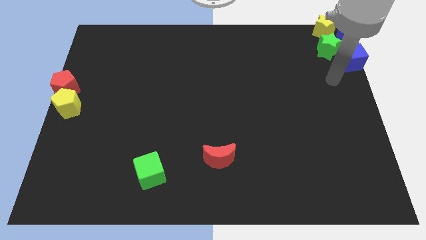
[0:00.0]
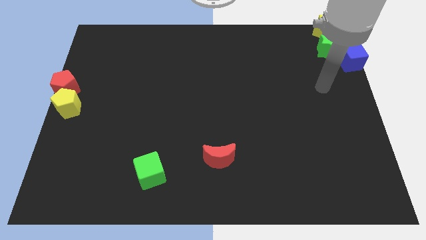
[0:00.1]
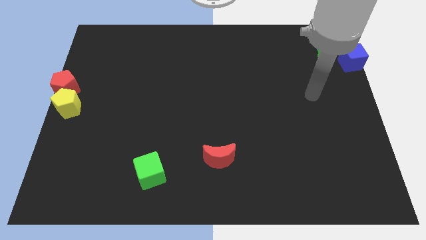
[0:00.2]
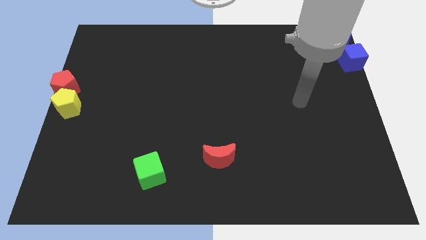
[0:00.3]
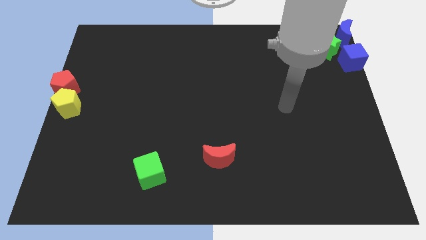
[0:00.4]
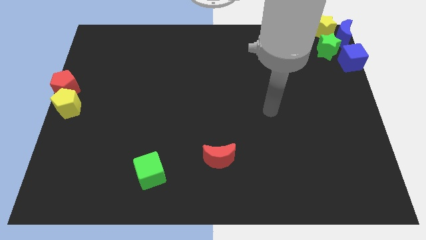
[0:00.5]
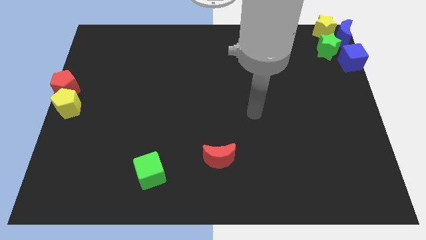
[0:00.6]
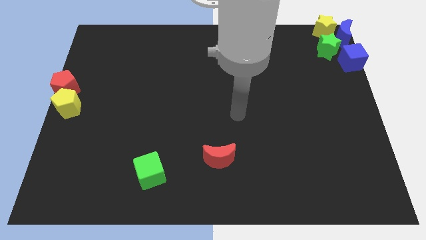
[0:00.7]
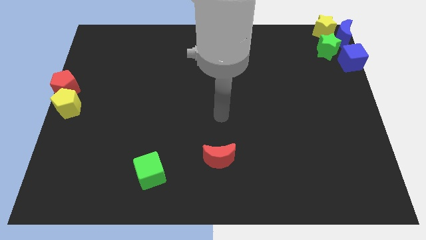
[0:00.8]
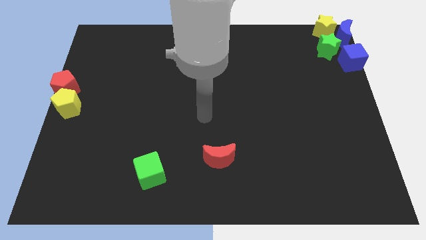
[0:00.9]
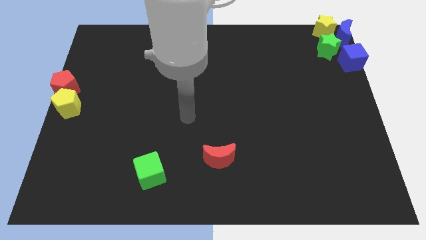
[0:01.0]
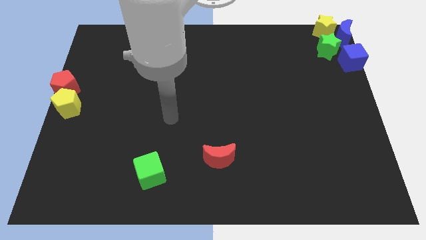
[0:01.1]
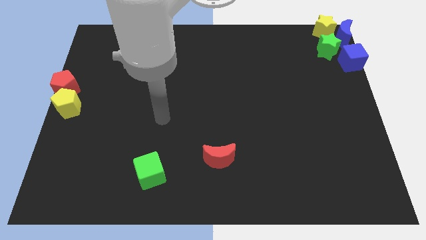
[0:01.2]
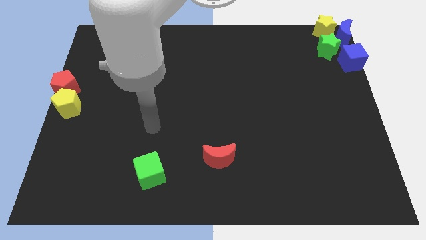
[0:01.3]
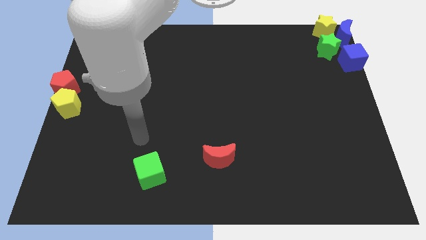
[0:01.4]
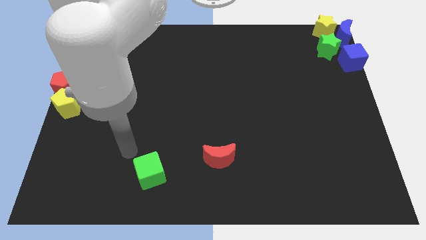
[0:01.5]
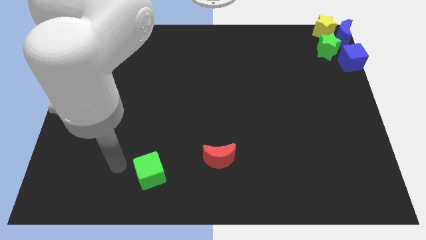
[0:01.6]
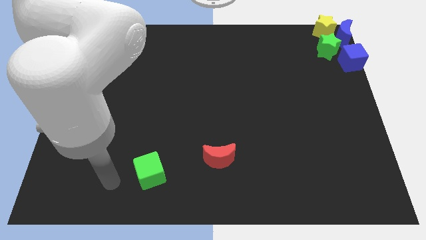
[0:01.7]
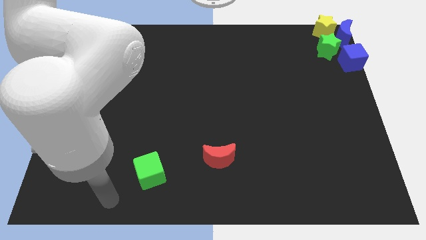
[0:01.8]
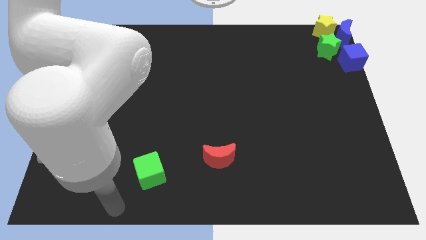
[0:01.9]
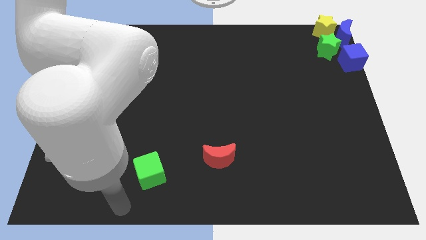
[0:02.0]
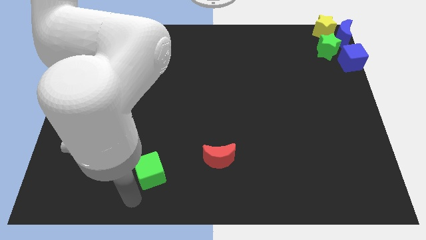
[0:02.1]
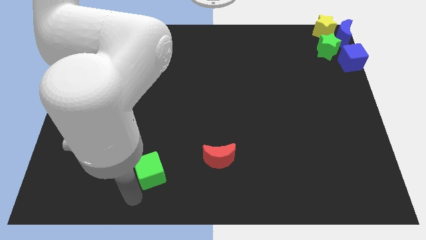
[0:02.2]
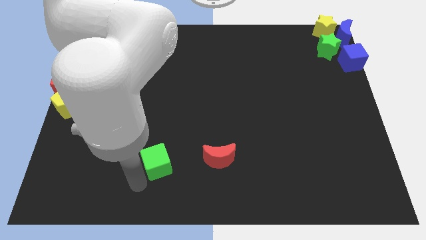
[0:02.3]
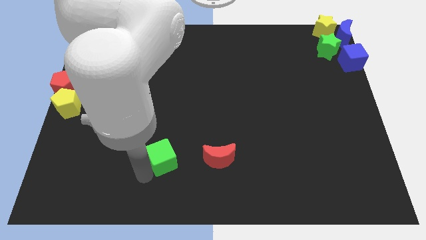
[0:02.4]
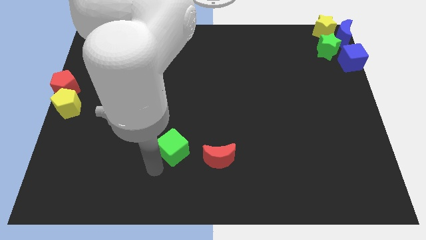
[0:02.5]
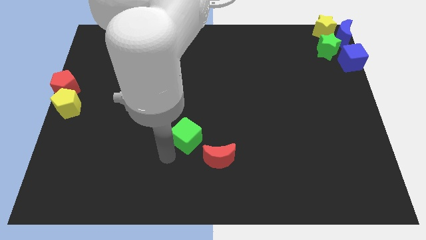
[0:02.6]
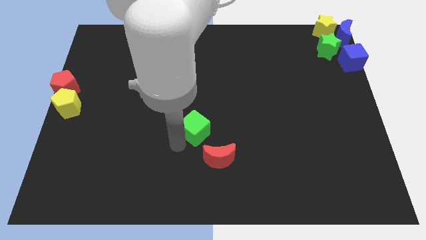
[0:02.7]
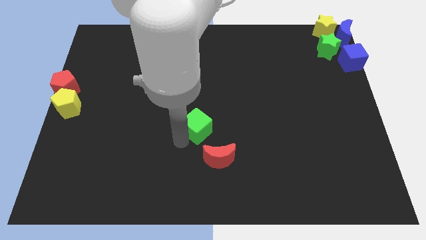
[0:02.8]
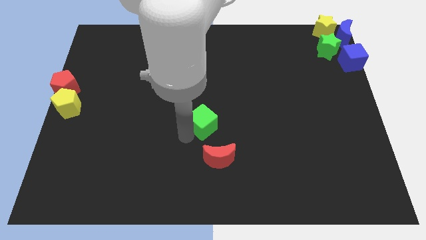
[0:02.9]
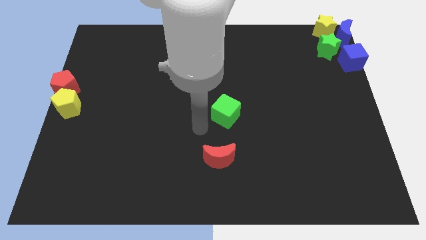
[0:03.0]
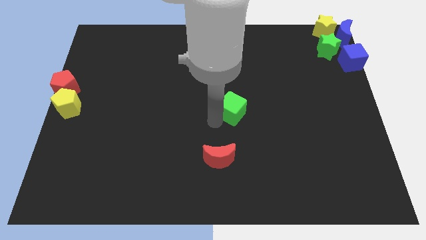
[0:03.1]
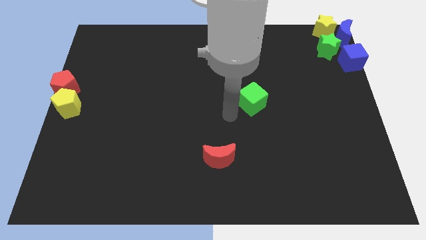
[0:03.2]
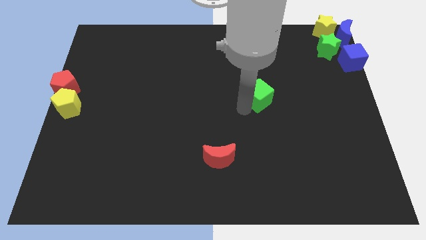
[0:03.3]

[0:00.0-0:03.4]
move the green cube towards the top right

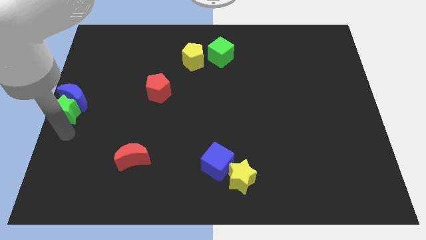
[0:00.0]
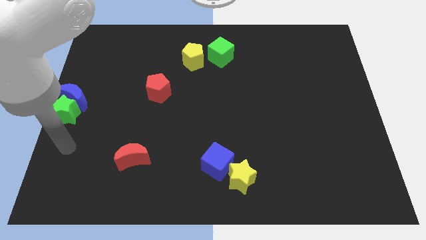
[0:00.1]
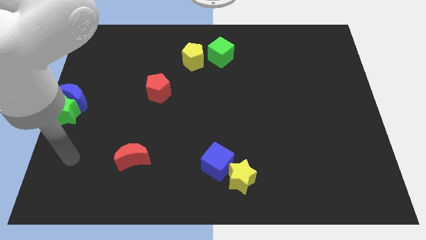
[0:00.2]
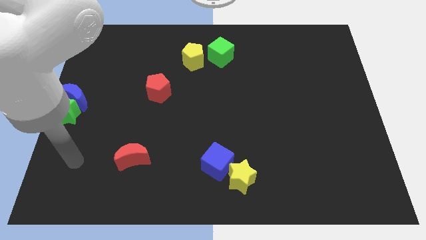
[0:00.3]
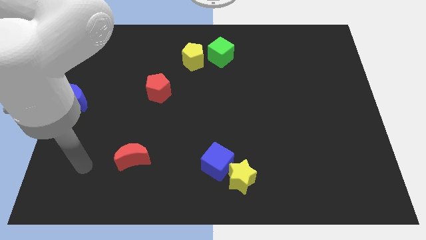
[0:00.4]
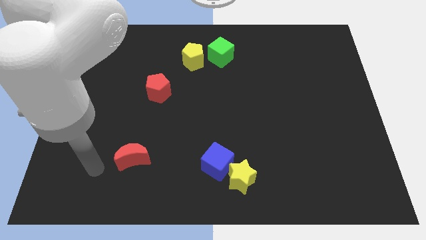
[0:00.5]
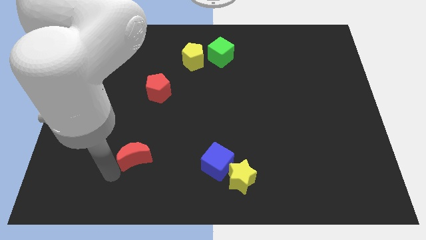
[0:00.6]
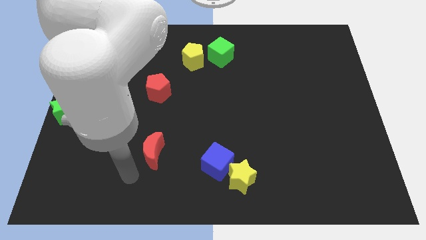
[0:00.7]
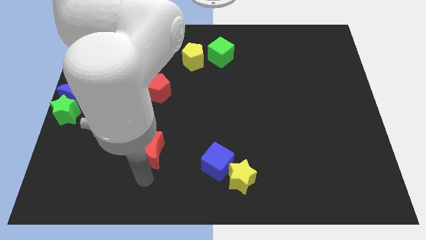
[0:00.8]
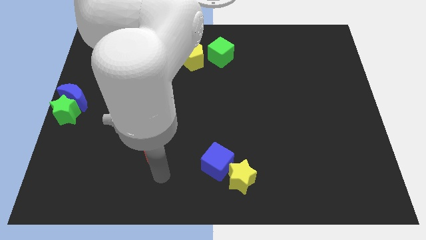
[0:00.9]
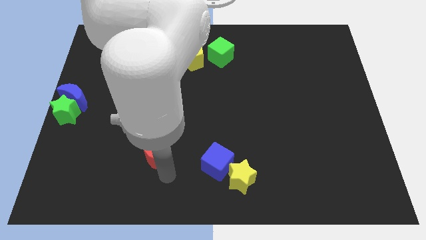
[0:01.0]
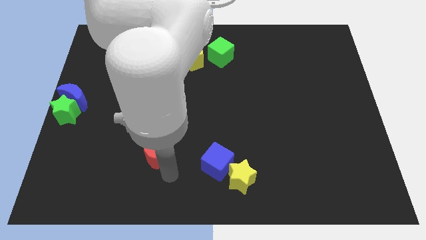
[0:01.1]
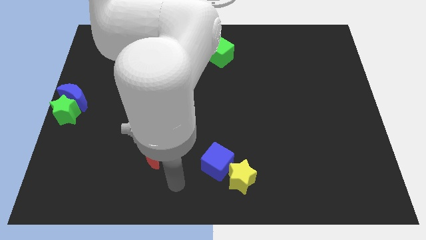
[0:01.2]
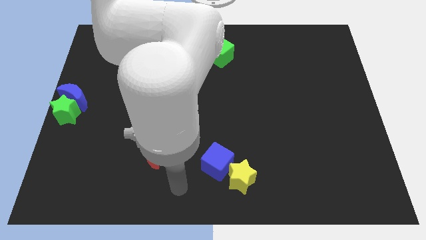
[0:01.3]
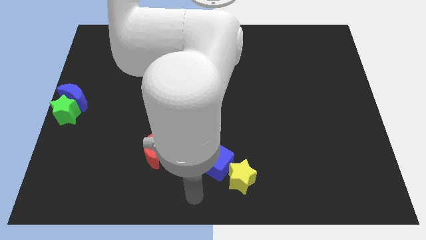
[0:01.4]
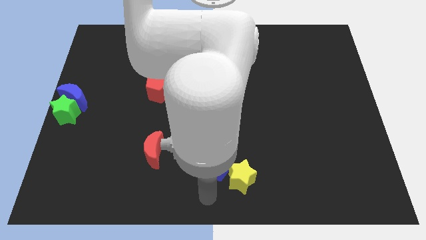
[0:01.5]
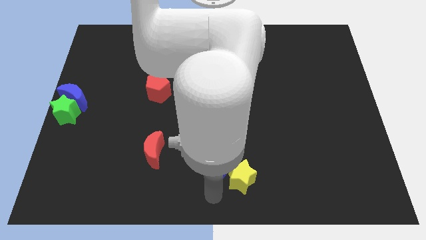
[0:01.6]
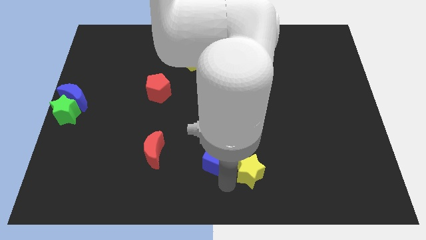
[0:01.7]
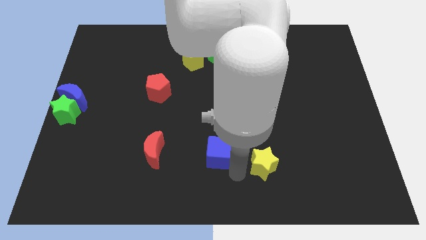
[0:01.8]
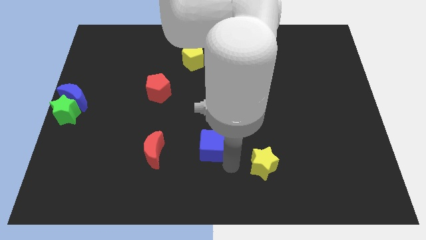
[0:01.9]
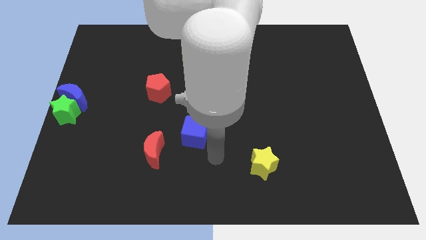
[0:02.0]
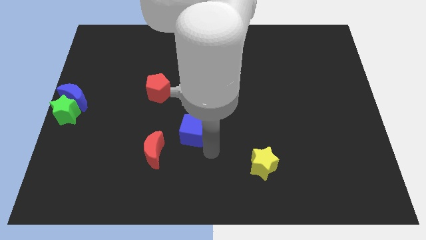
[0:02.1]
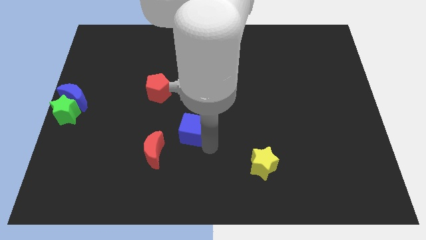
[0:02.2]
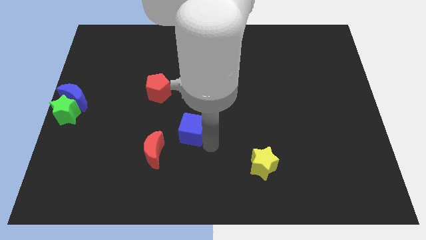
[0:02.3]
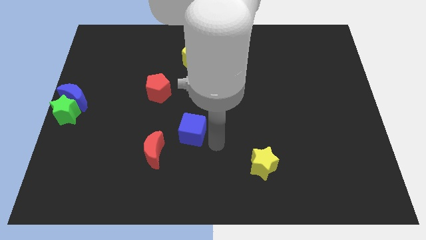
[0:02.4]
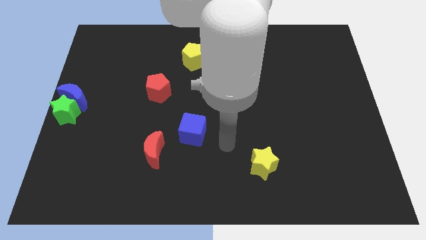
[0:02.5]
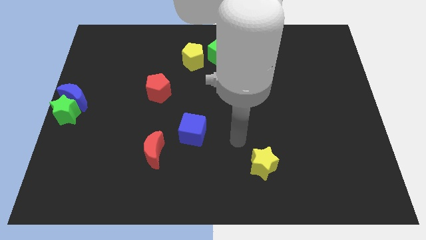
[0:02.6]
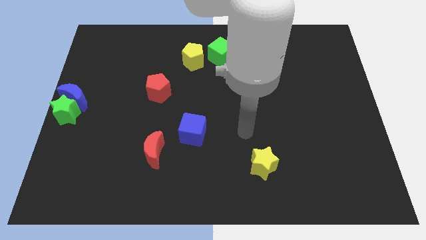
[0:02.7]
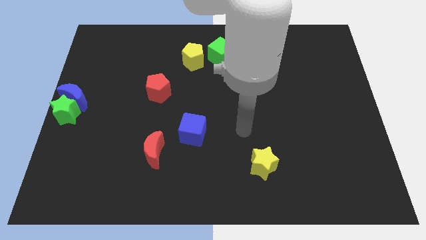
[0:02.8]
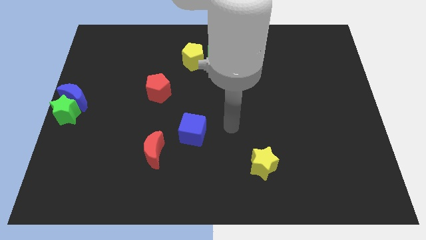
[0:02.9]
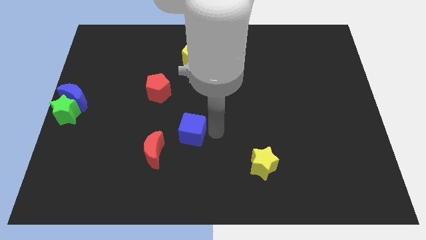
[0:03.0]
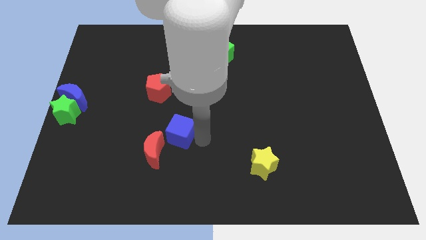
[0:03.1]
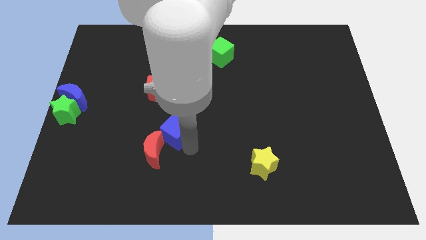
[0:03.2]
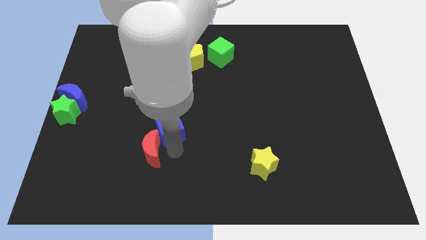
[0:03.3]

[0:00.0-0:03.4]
push blue cube into red crescent

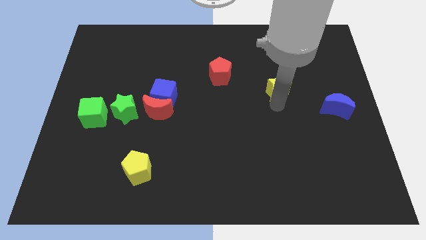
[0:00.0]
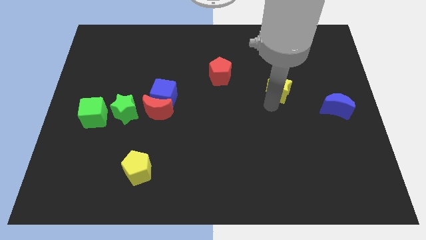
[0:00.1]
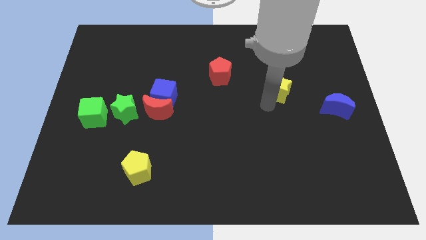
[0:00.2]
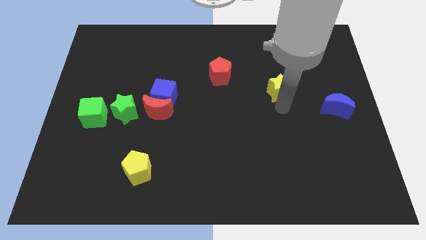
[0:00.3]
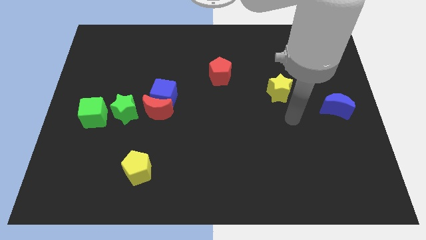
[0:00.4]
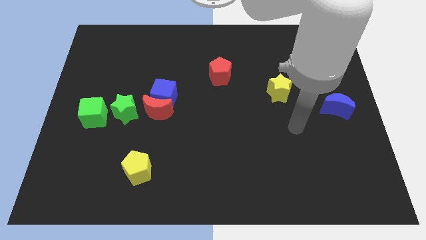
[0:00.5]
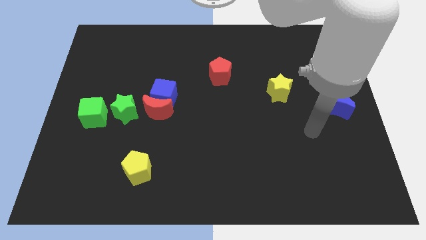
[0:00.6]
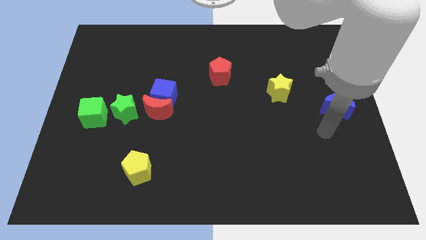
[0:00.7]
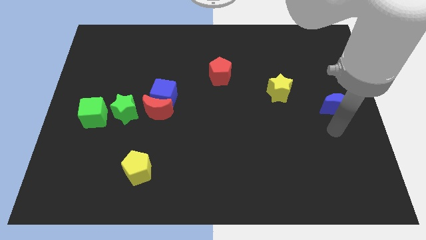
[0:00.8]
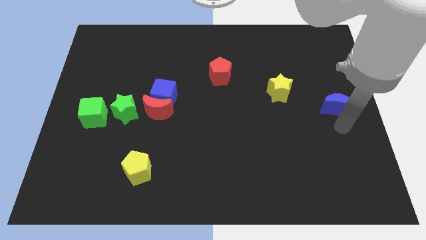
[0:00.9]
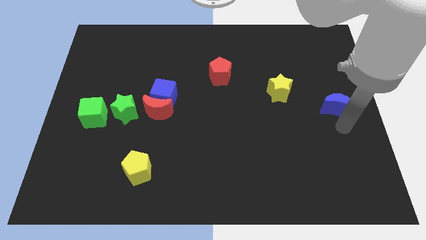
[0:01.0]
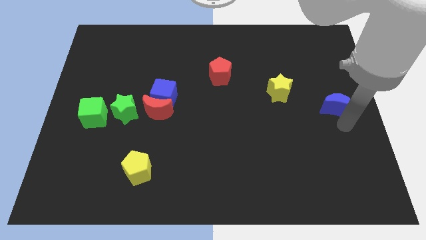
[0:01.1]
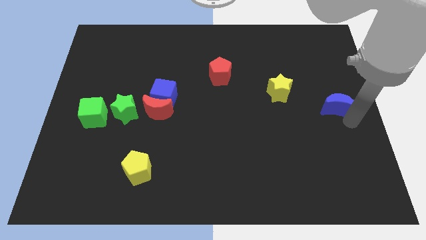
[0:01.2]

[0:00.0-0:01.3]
move the arm away from the yellow star

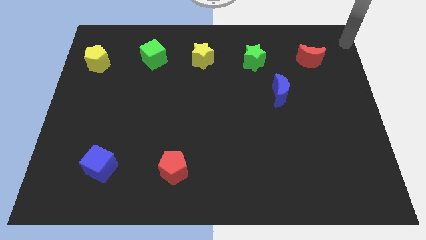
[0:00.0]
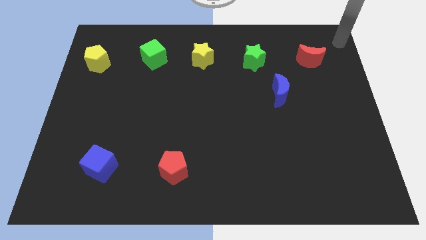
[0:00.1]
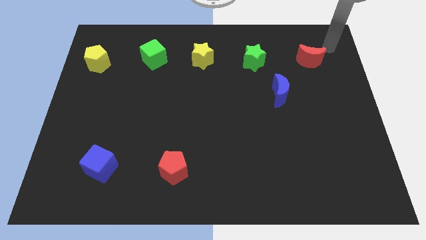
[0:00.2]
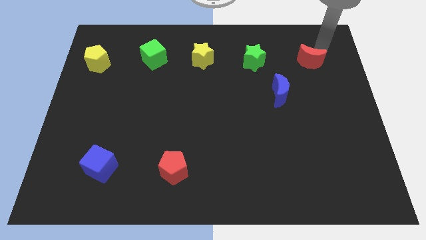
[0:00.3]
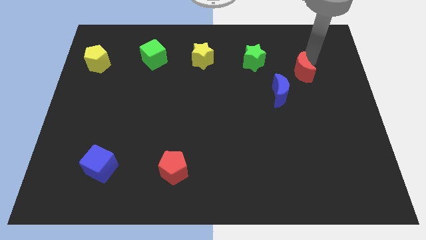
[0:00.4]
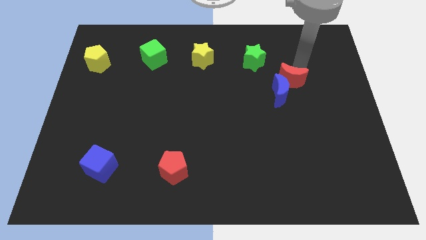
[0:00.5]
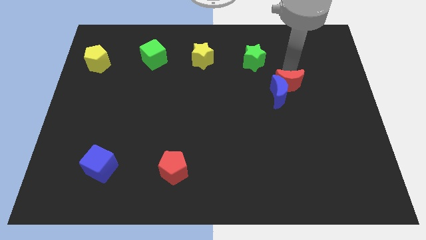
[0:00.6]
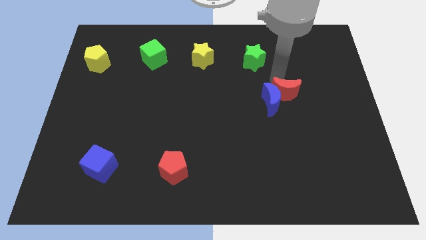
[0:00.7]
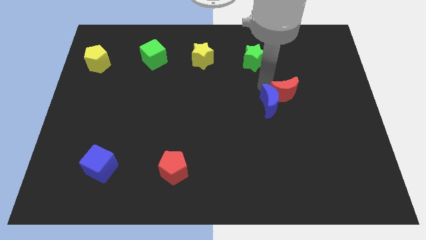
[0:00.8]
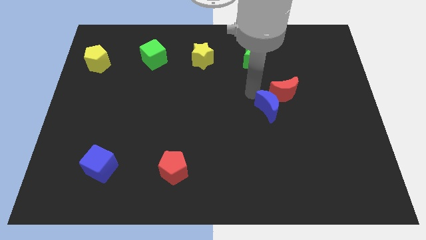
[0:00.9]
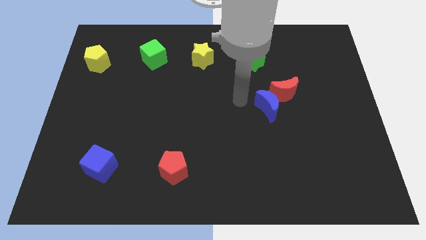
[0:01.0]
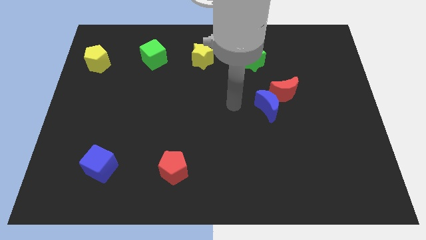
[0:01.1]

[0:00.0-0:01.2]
push the red crescent into the blue moon
